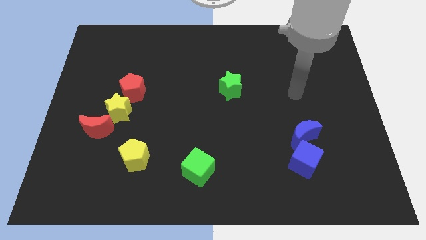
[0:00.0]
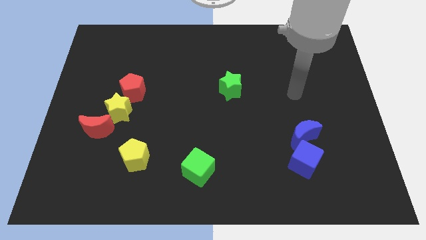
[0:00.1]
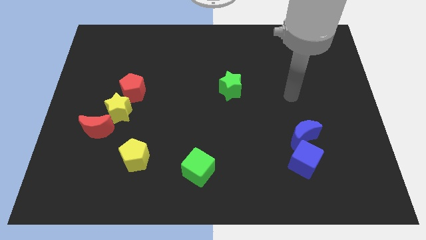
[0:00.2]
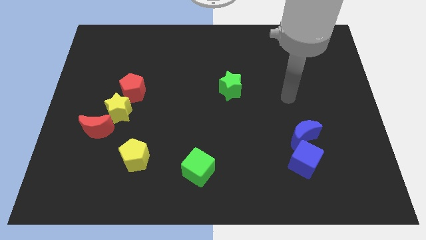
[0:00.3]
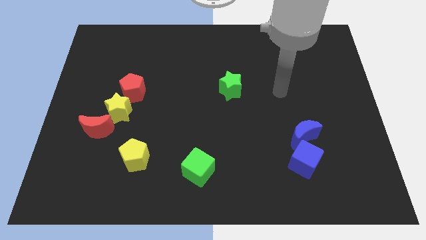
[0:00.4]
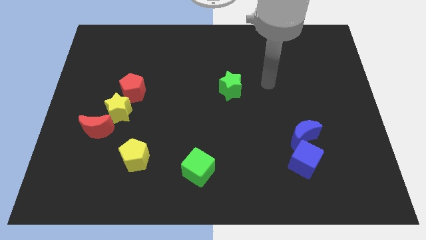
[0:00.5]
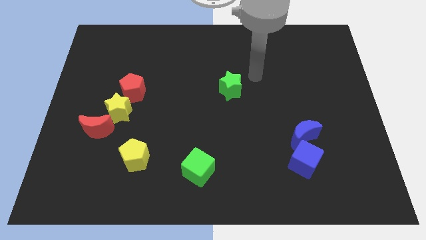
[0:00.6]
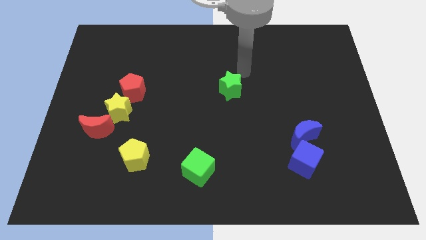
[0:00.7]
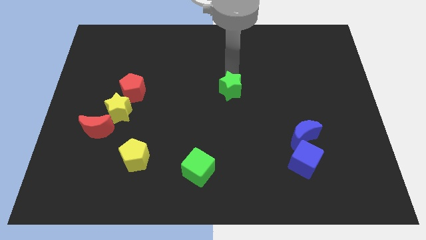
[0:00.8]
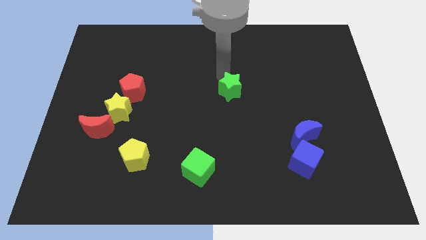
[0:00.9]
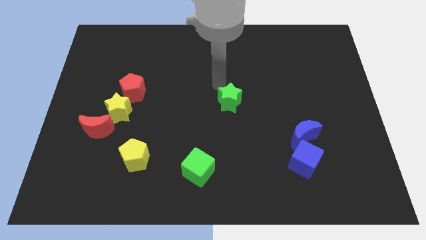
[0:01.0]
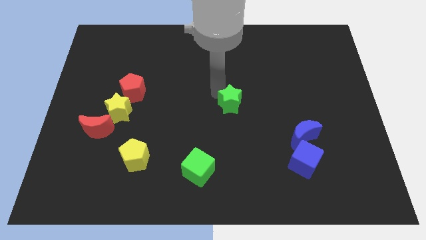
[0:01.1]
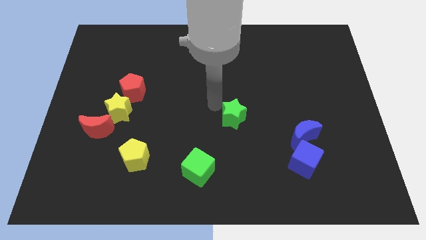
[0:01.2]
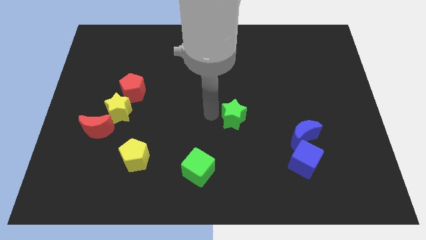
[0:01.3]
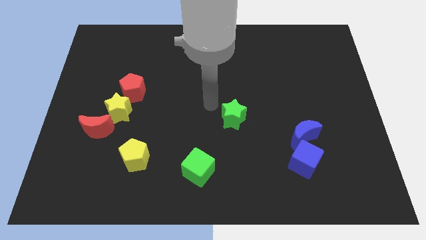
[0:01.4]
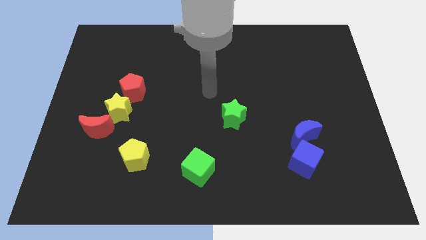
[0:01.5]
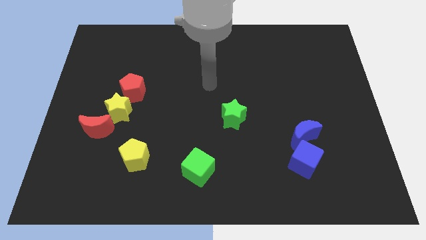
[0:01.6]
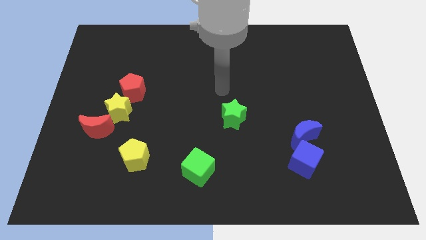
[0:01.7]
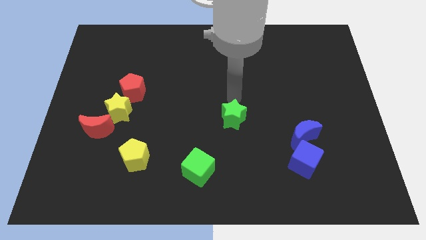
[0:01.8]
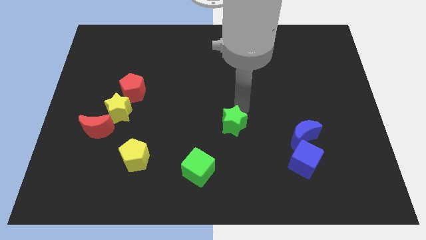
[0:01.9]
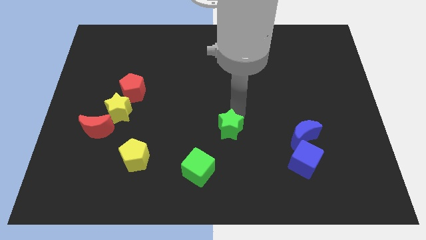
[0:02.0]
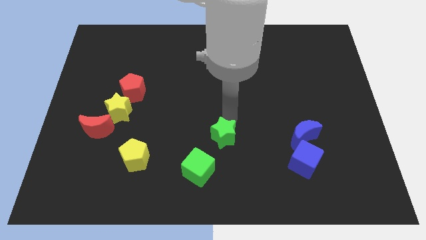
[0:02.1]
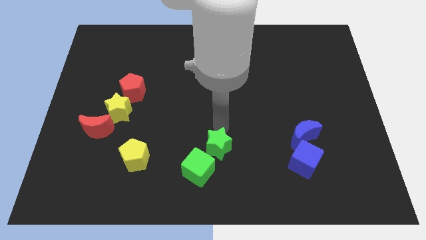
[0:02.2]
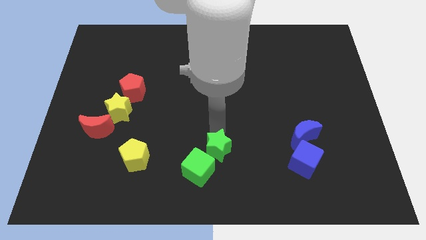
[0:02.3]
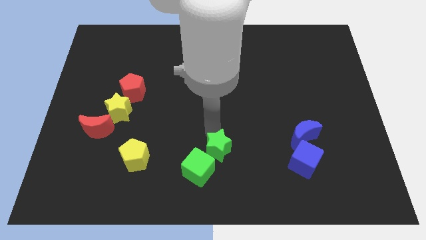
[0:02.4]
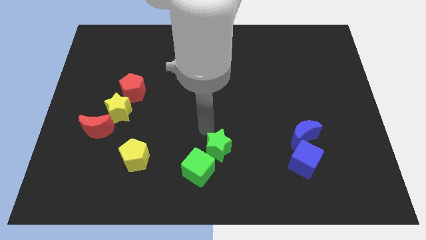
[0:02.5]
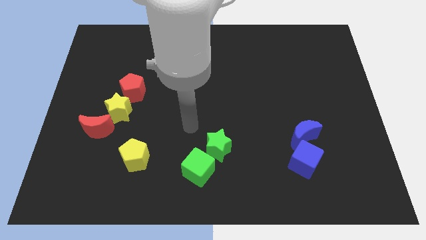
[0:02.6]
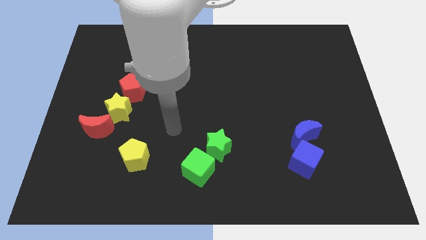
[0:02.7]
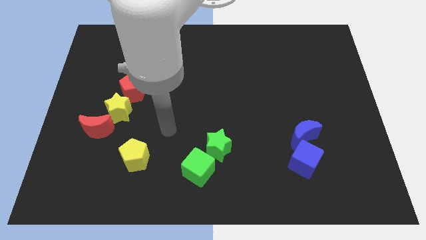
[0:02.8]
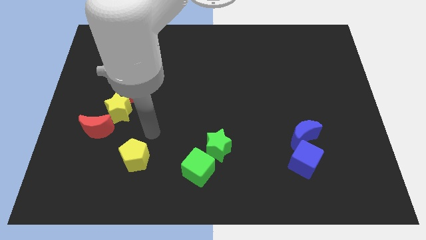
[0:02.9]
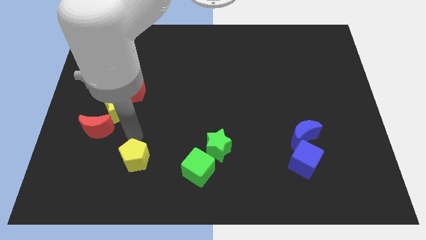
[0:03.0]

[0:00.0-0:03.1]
place the green star on the top right of the green cube

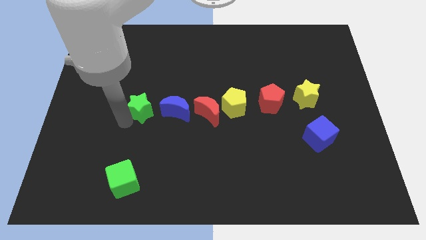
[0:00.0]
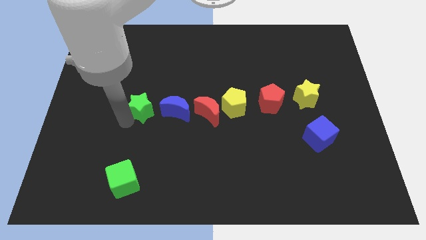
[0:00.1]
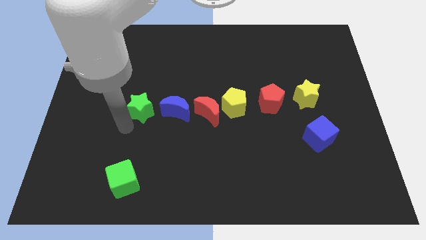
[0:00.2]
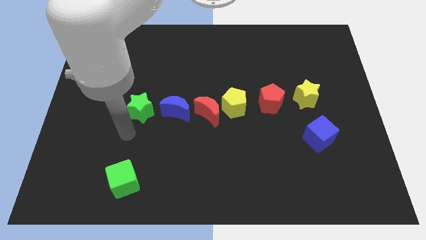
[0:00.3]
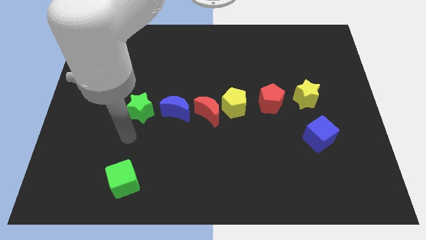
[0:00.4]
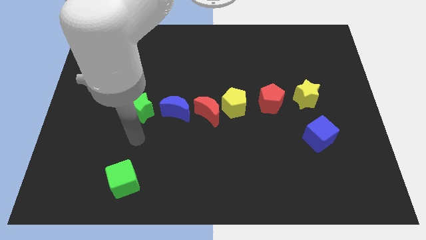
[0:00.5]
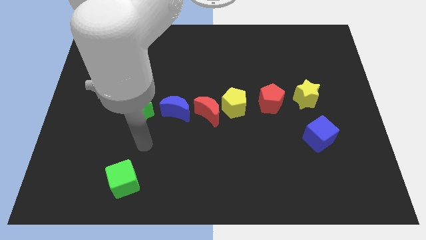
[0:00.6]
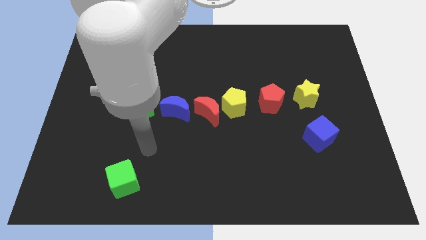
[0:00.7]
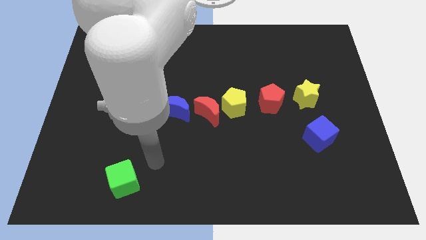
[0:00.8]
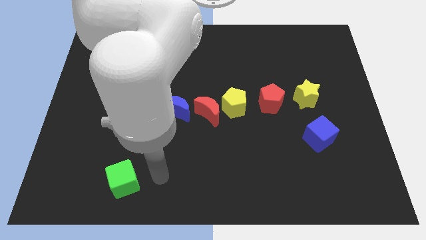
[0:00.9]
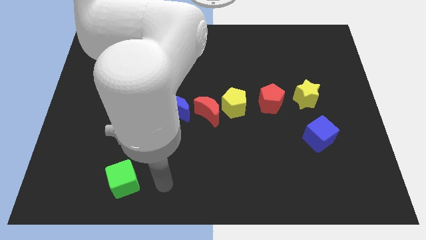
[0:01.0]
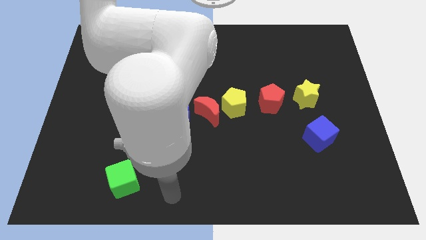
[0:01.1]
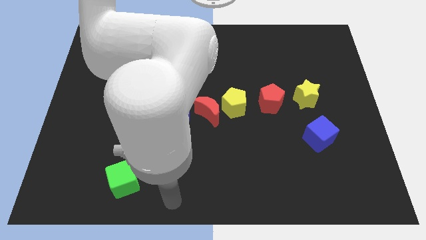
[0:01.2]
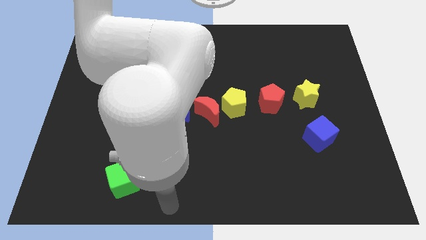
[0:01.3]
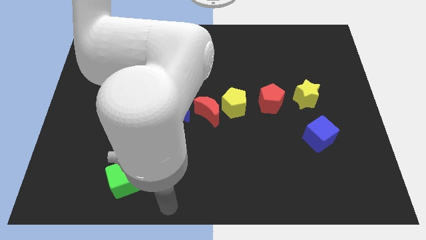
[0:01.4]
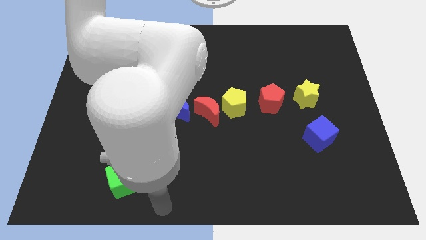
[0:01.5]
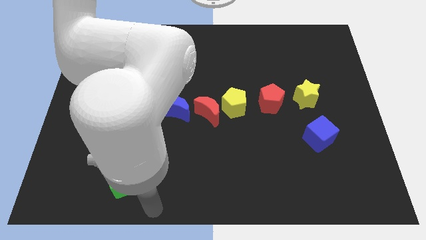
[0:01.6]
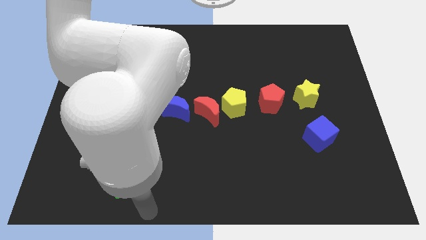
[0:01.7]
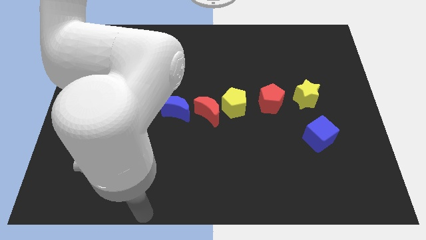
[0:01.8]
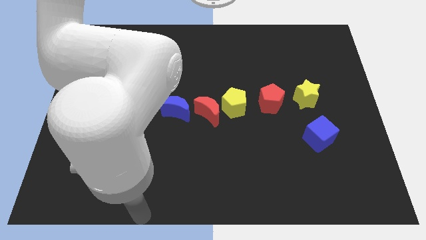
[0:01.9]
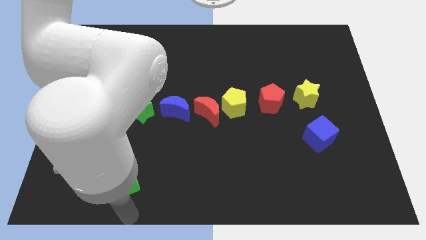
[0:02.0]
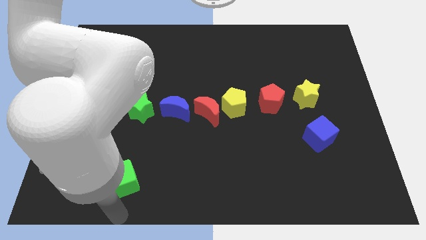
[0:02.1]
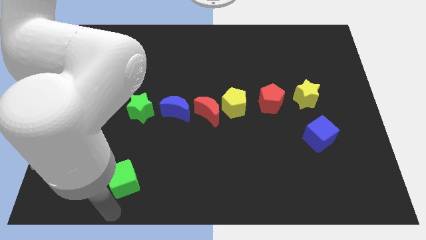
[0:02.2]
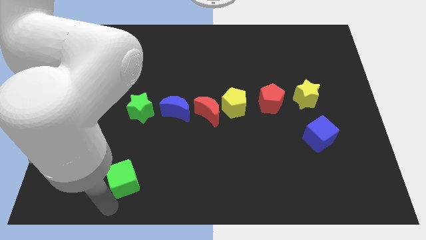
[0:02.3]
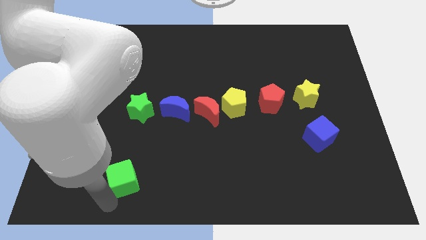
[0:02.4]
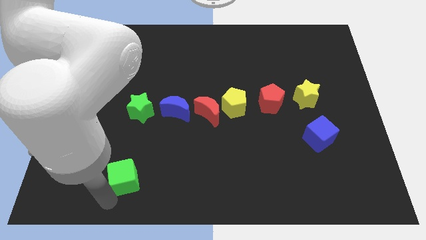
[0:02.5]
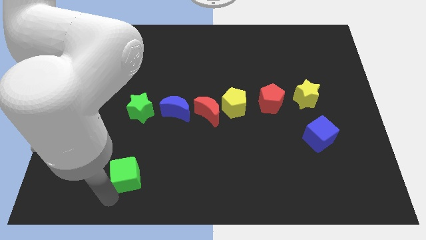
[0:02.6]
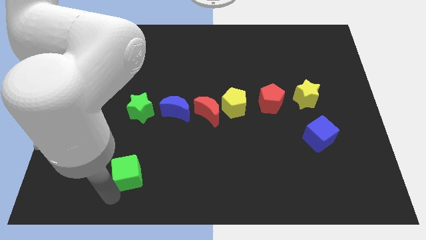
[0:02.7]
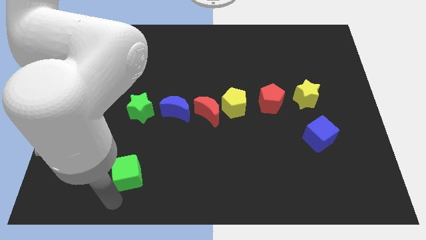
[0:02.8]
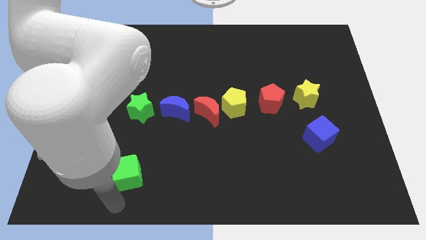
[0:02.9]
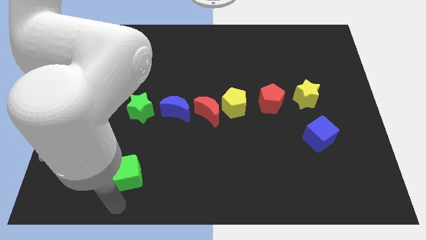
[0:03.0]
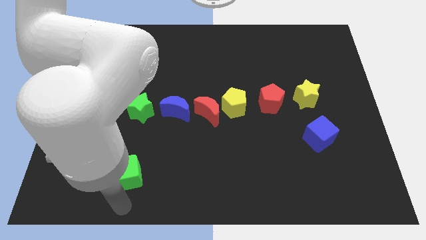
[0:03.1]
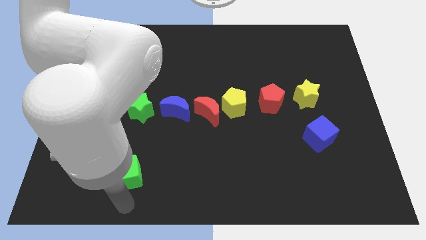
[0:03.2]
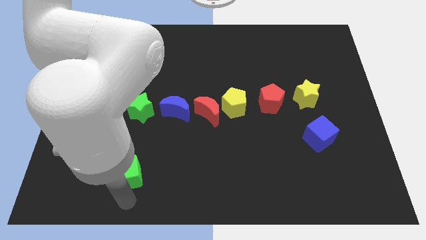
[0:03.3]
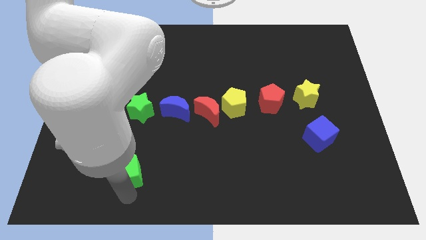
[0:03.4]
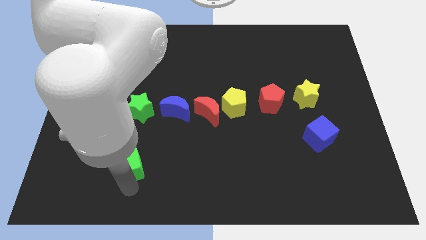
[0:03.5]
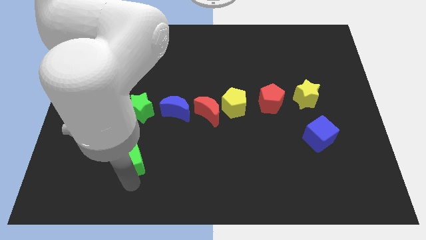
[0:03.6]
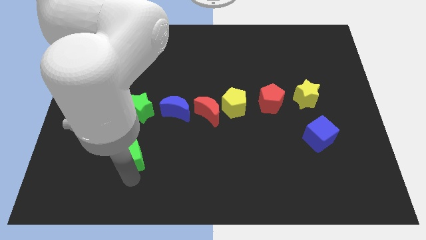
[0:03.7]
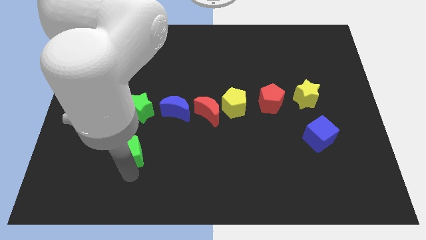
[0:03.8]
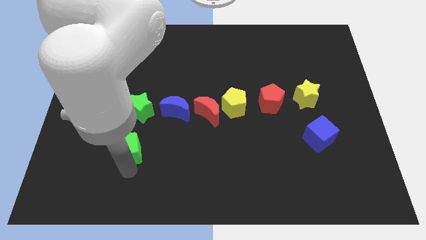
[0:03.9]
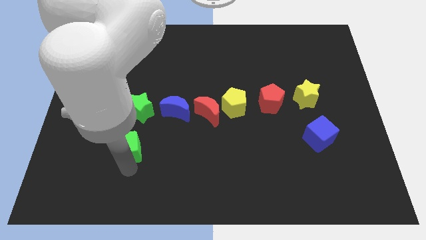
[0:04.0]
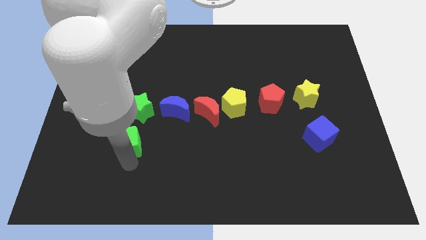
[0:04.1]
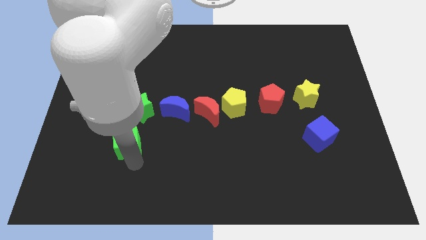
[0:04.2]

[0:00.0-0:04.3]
move the green cube towards the bottom side of the green star

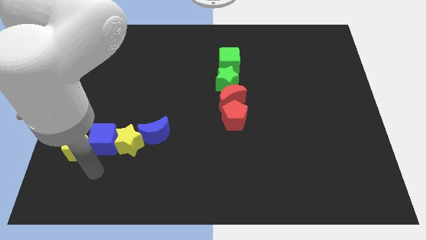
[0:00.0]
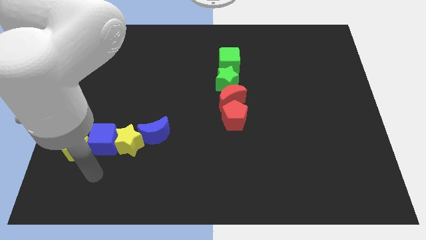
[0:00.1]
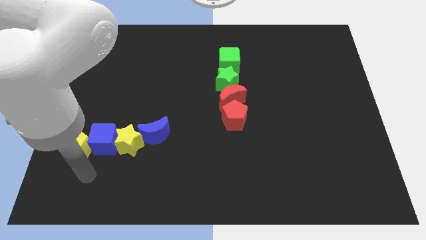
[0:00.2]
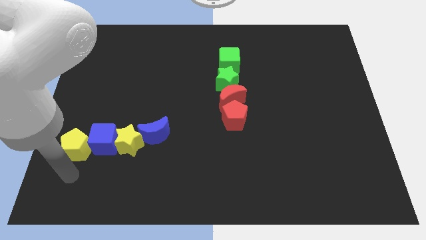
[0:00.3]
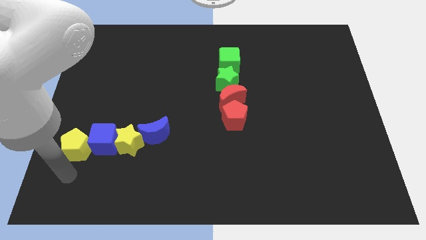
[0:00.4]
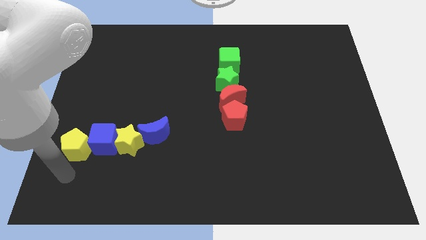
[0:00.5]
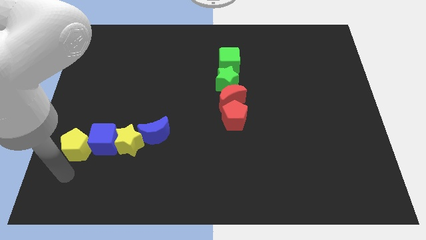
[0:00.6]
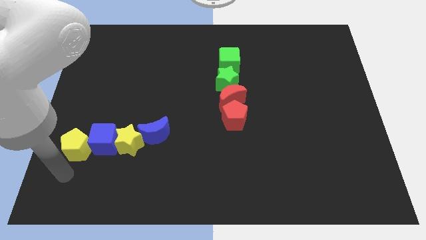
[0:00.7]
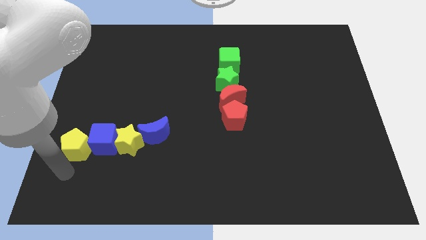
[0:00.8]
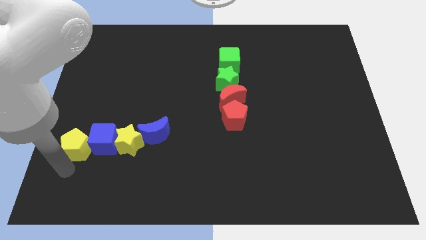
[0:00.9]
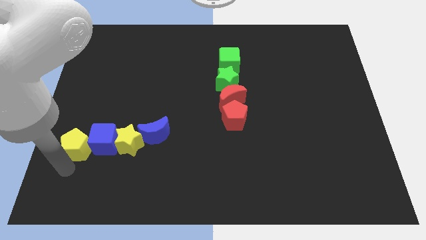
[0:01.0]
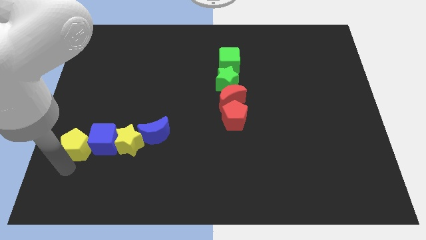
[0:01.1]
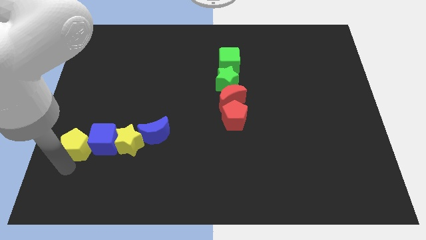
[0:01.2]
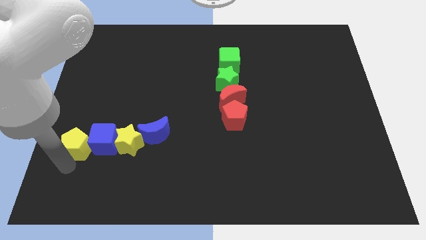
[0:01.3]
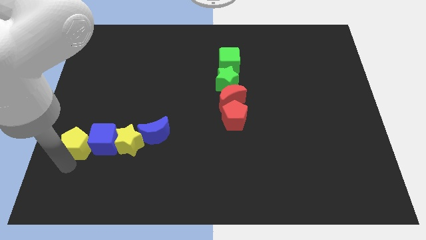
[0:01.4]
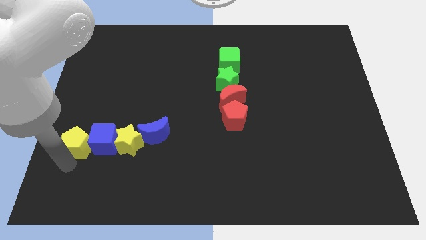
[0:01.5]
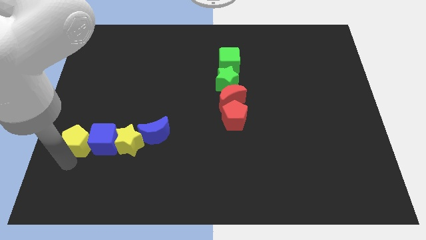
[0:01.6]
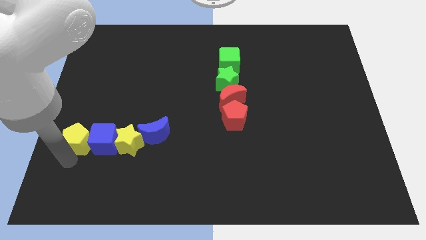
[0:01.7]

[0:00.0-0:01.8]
move the yellow pentagon to the left side of the blue cube
